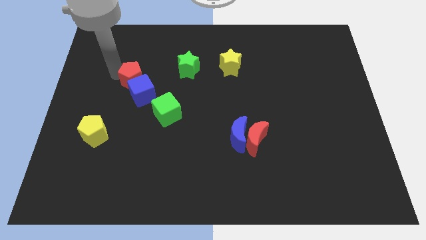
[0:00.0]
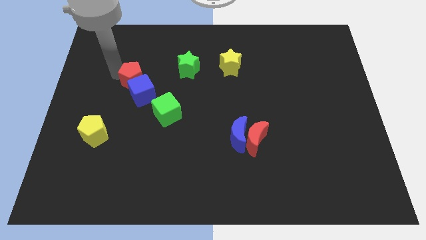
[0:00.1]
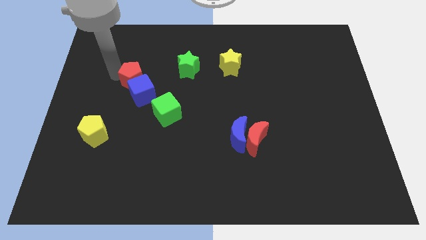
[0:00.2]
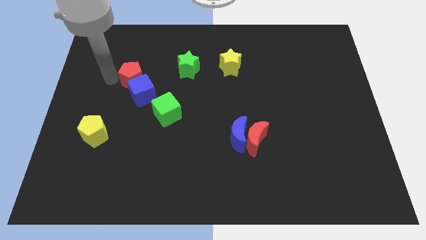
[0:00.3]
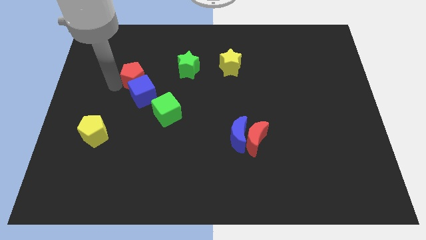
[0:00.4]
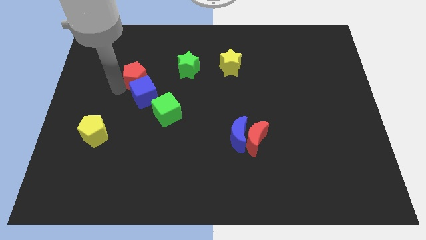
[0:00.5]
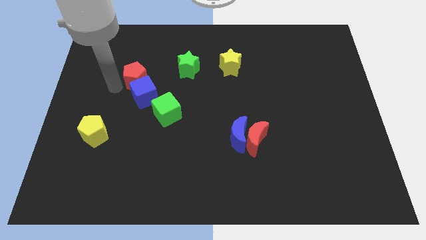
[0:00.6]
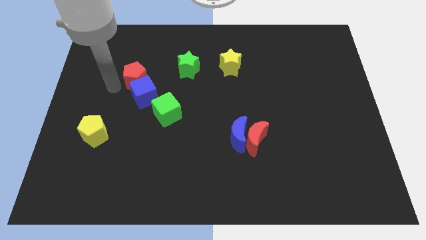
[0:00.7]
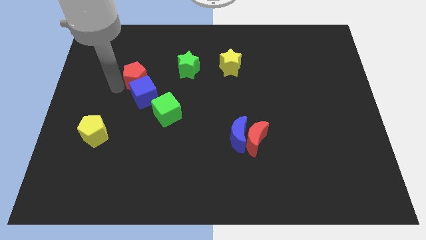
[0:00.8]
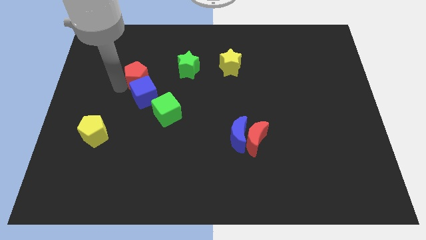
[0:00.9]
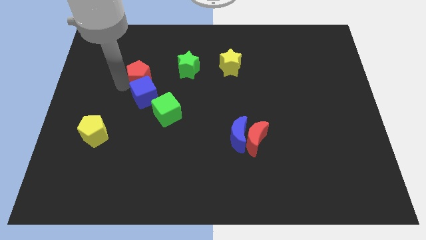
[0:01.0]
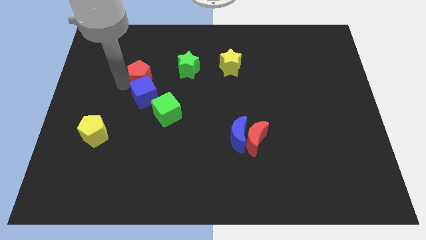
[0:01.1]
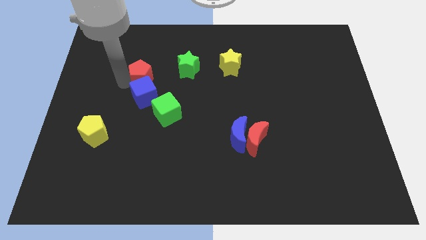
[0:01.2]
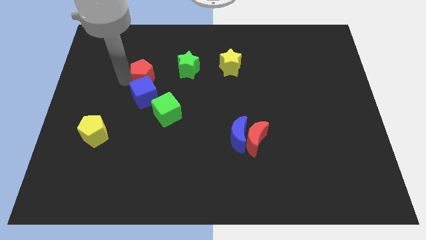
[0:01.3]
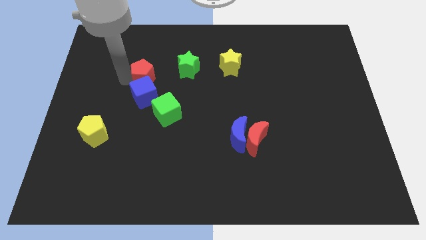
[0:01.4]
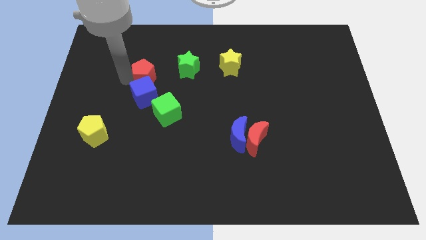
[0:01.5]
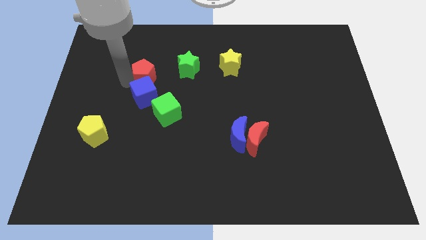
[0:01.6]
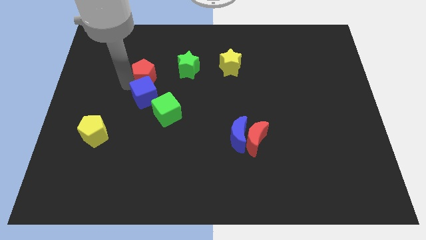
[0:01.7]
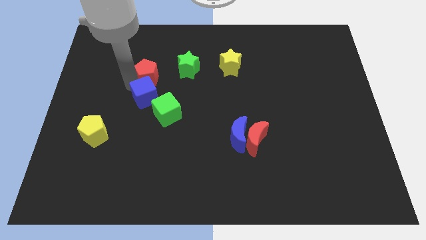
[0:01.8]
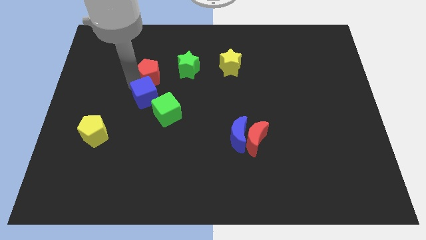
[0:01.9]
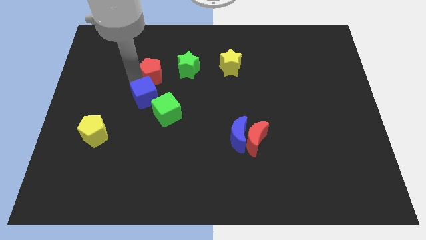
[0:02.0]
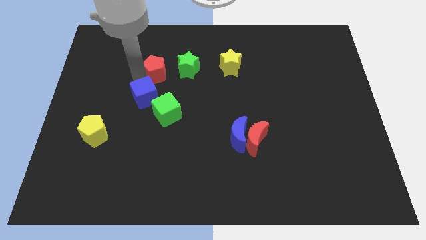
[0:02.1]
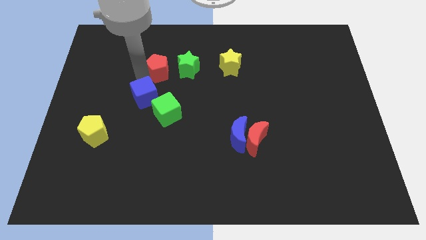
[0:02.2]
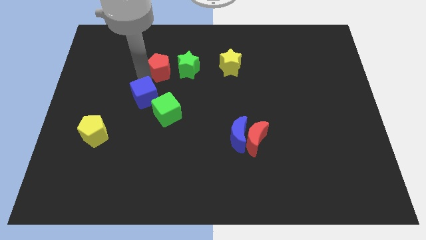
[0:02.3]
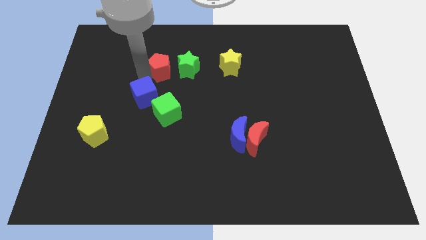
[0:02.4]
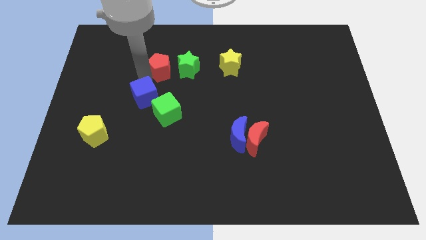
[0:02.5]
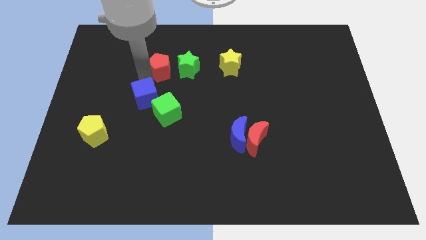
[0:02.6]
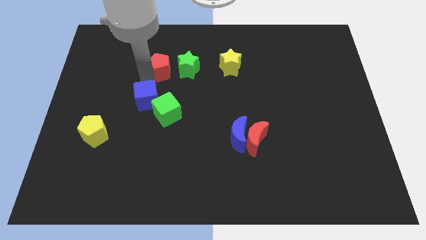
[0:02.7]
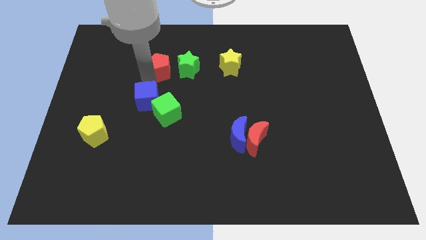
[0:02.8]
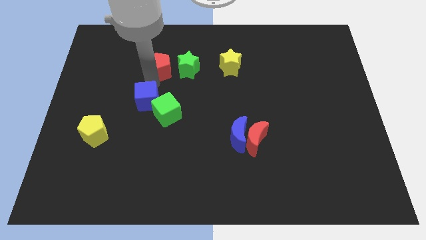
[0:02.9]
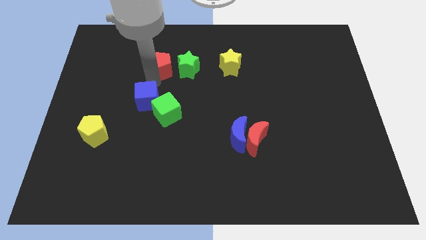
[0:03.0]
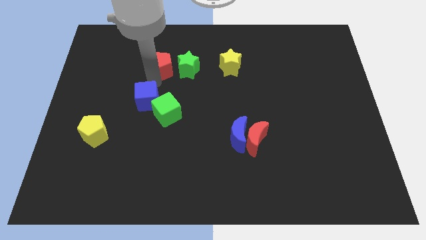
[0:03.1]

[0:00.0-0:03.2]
move the red pentagon left beside the green star

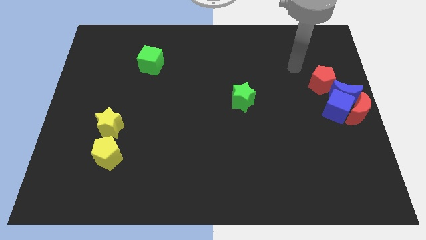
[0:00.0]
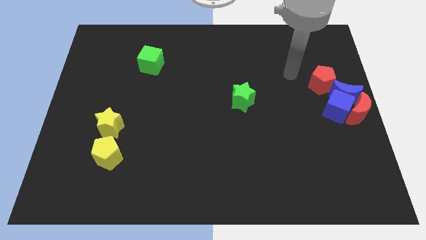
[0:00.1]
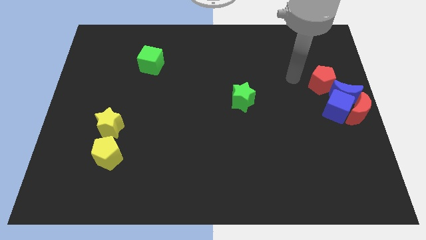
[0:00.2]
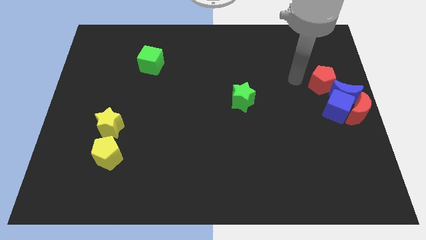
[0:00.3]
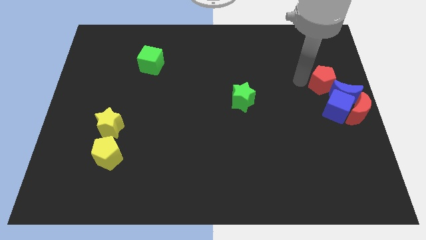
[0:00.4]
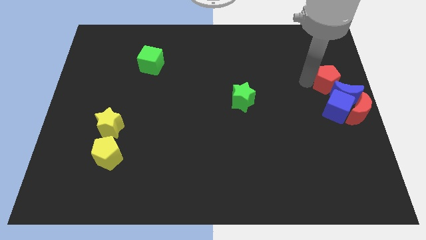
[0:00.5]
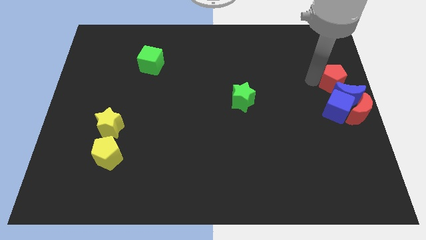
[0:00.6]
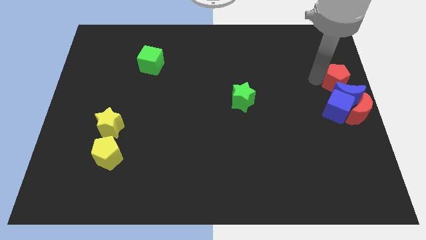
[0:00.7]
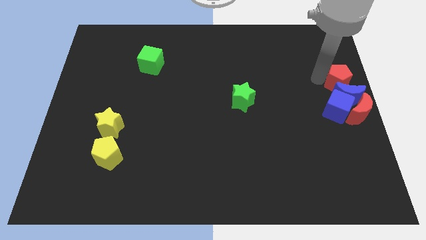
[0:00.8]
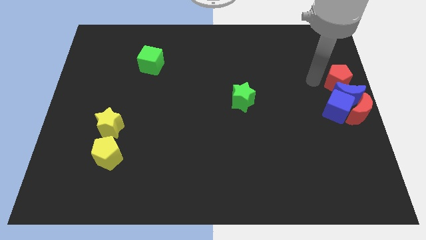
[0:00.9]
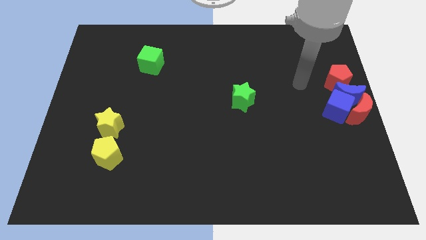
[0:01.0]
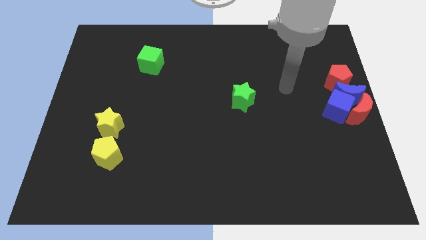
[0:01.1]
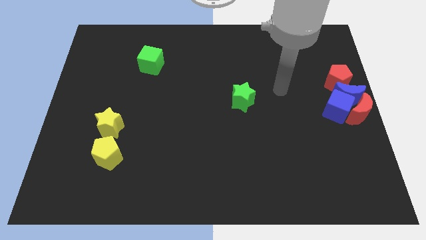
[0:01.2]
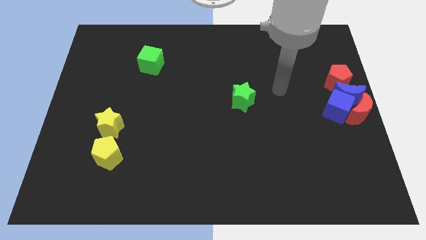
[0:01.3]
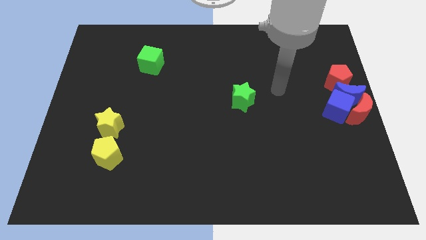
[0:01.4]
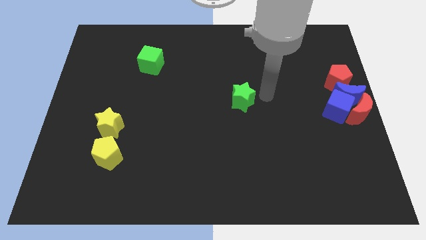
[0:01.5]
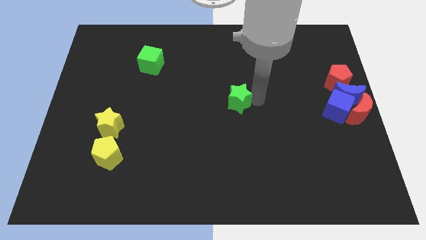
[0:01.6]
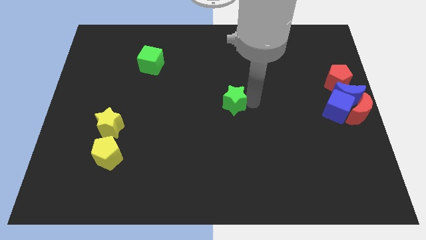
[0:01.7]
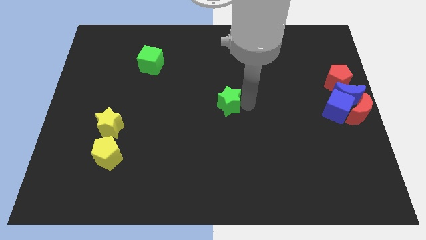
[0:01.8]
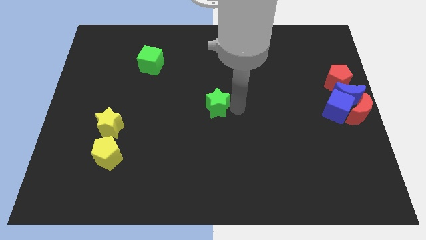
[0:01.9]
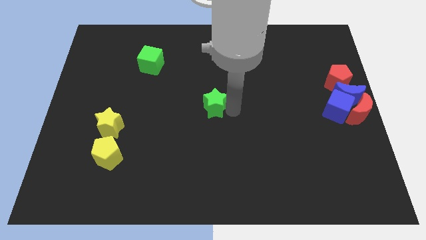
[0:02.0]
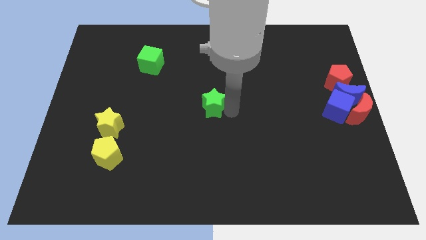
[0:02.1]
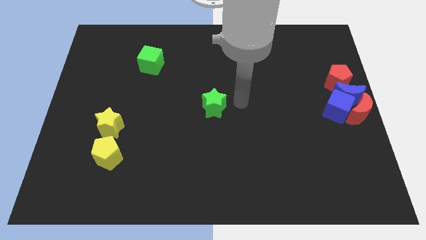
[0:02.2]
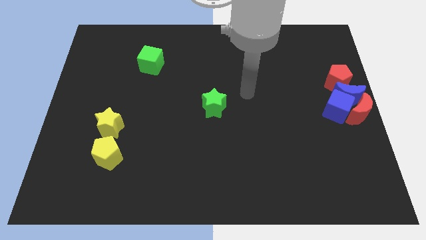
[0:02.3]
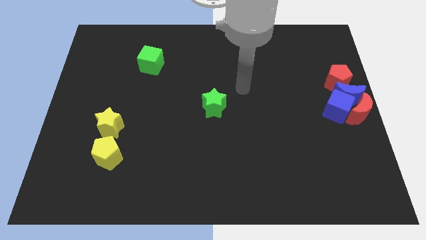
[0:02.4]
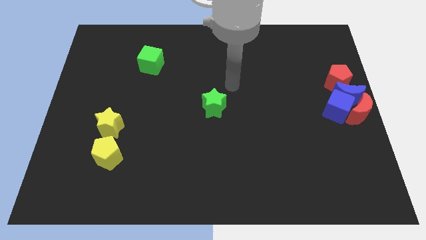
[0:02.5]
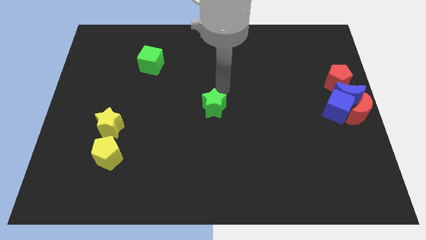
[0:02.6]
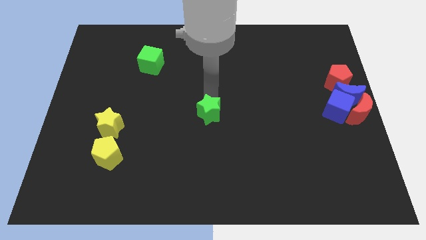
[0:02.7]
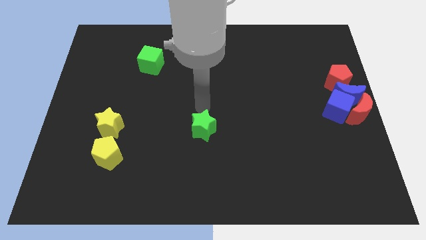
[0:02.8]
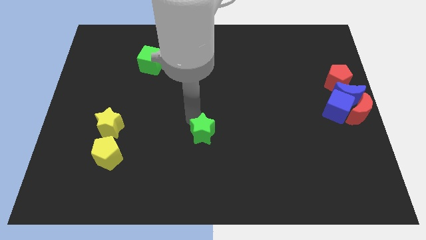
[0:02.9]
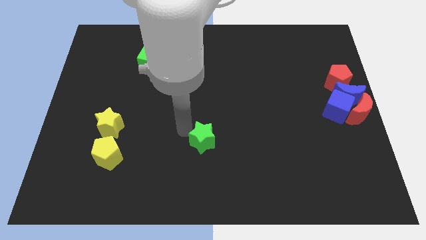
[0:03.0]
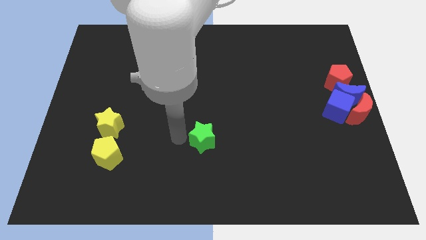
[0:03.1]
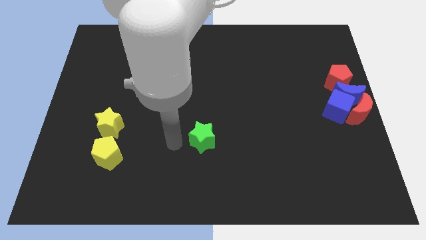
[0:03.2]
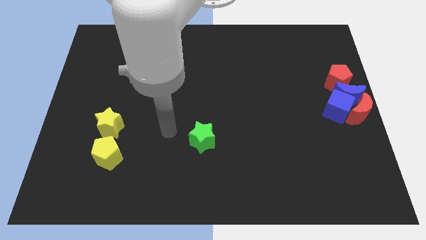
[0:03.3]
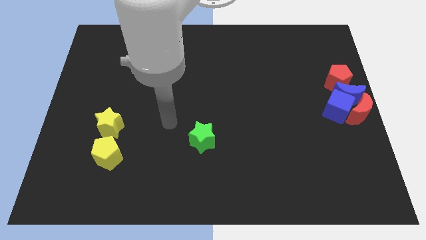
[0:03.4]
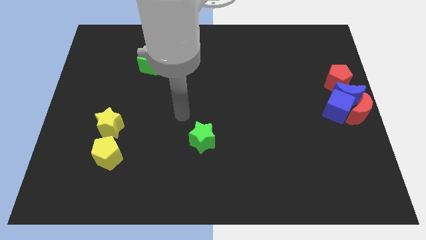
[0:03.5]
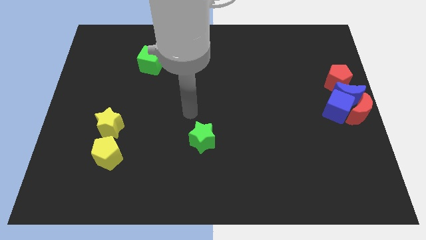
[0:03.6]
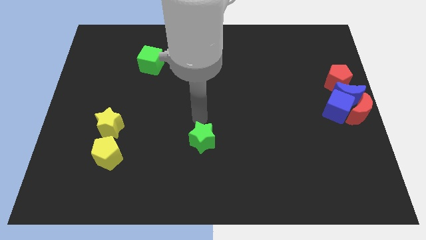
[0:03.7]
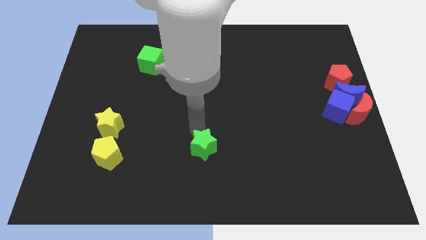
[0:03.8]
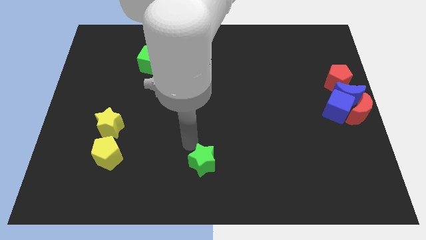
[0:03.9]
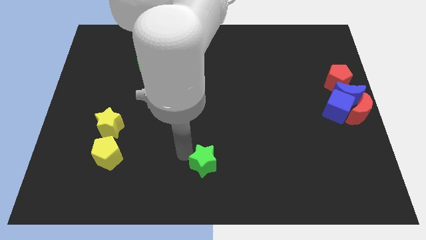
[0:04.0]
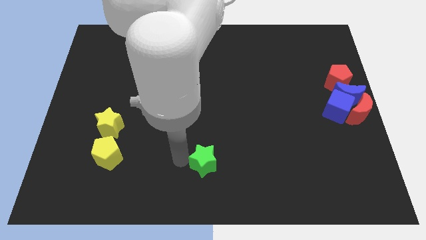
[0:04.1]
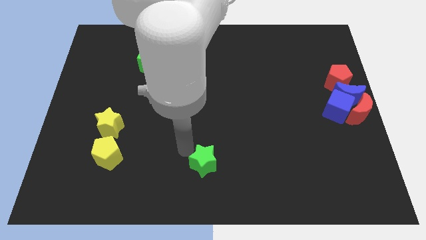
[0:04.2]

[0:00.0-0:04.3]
place the green star to the right of the yellow pentagon

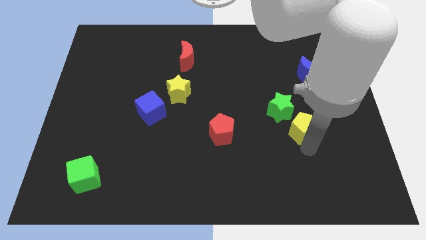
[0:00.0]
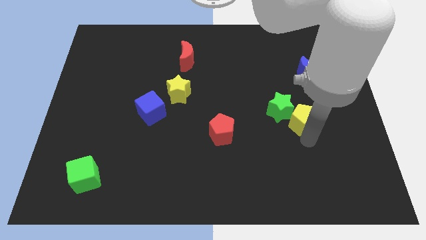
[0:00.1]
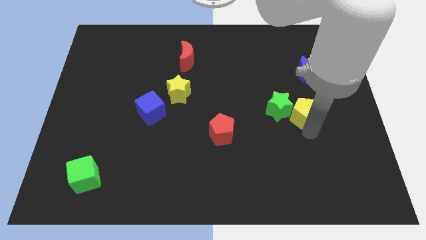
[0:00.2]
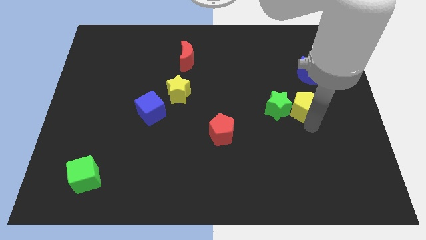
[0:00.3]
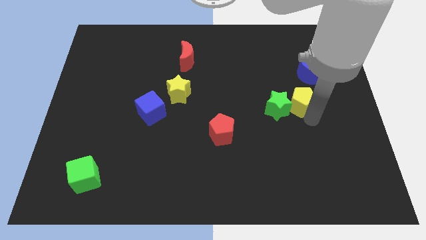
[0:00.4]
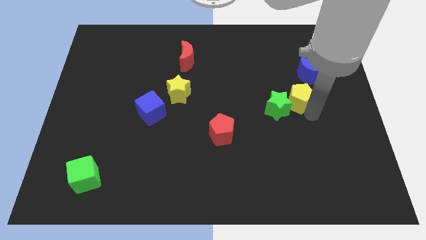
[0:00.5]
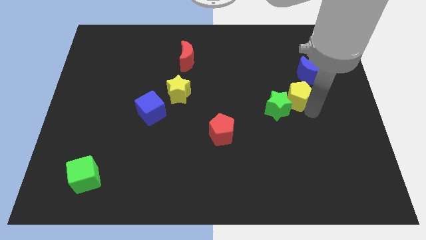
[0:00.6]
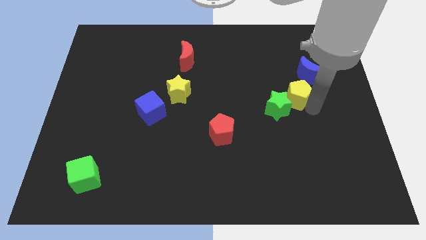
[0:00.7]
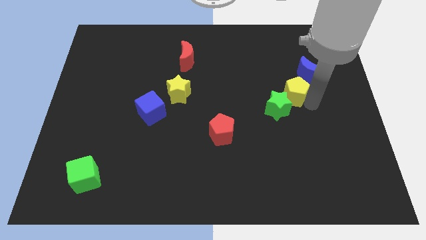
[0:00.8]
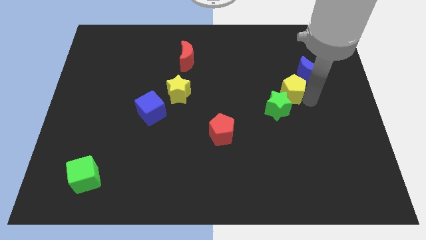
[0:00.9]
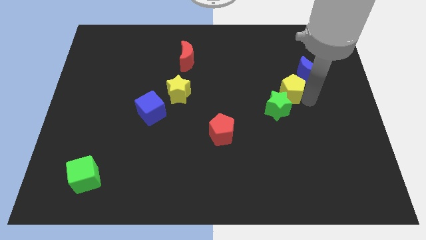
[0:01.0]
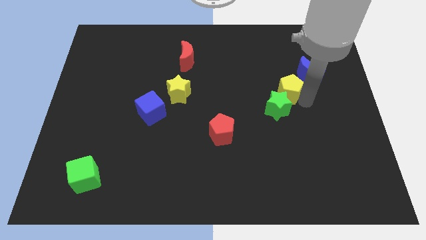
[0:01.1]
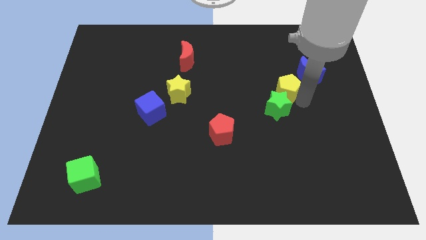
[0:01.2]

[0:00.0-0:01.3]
move yellow pentagon diagonally above green star

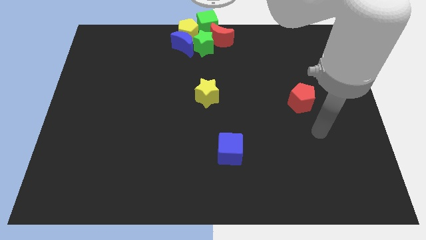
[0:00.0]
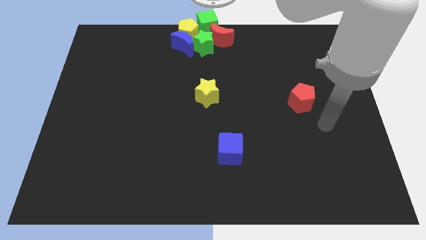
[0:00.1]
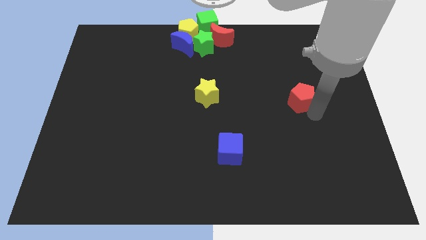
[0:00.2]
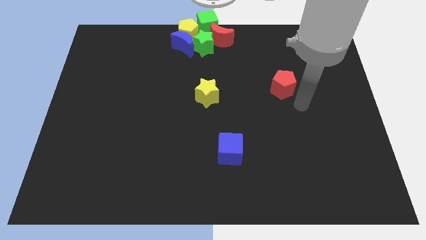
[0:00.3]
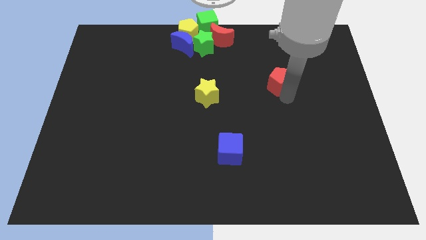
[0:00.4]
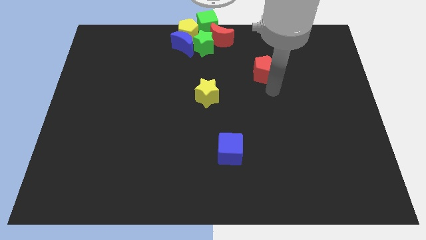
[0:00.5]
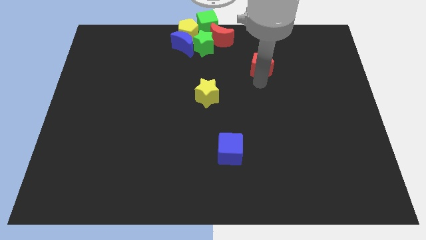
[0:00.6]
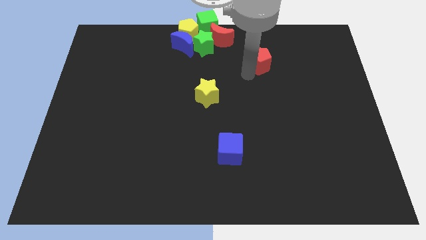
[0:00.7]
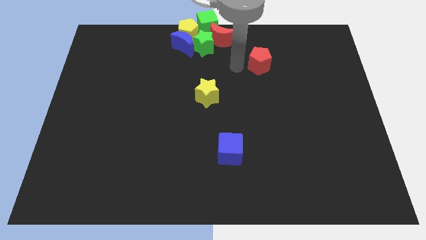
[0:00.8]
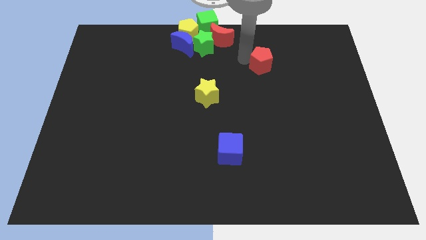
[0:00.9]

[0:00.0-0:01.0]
move the red pentagon to the top of the board
